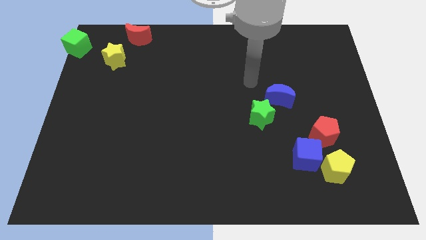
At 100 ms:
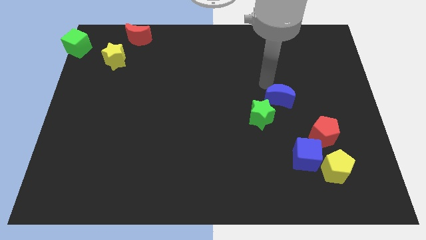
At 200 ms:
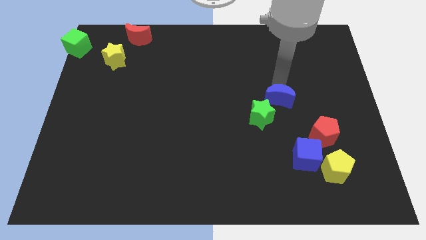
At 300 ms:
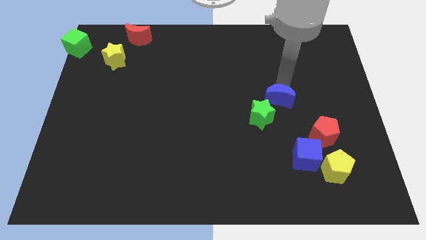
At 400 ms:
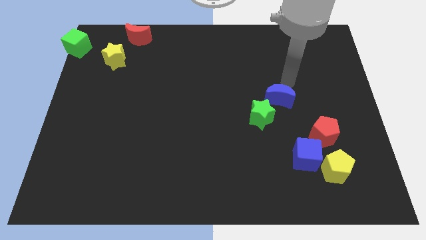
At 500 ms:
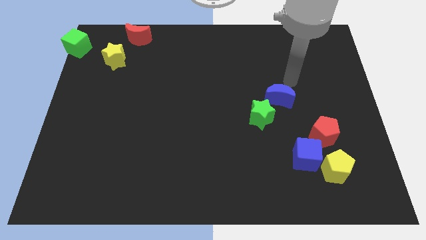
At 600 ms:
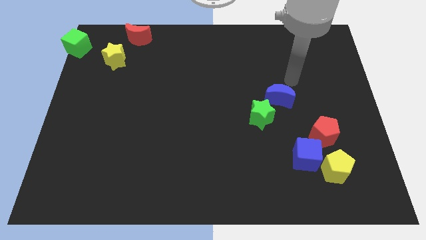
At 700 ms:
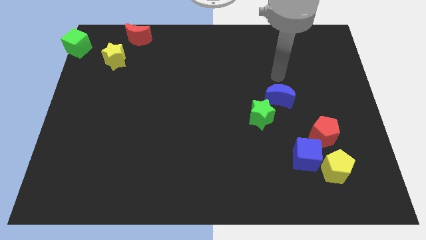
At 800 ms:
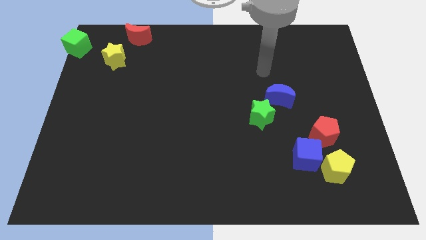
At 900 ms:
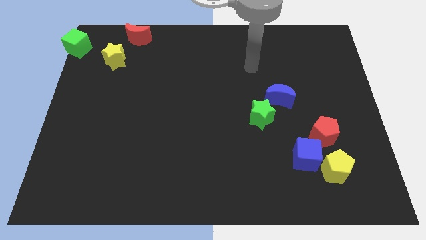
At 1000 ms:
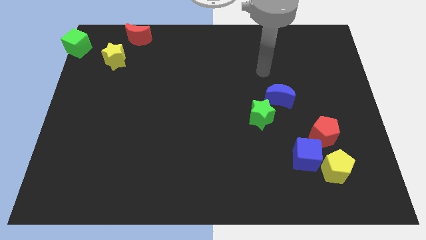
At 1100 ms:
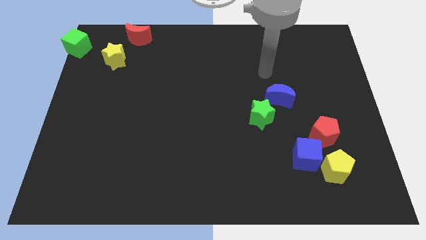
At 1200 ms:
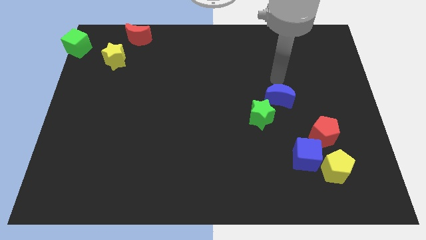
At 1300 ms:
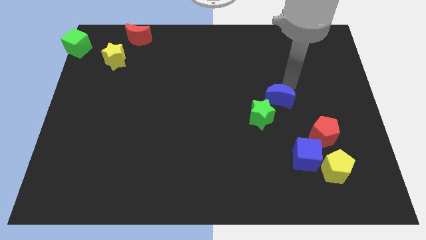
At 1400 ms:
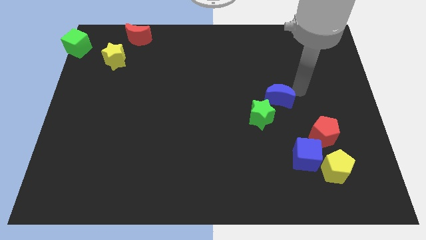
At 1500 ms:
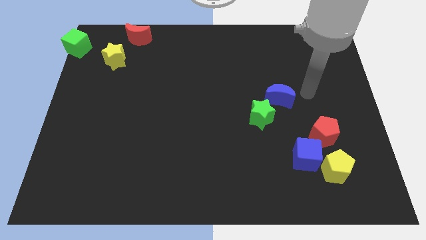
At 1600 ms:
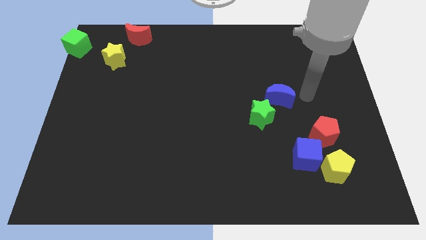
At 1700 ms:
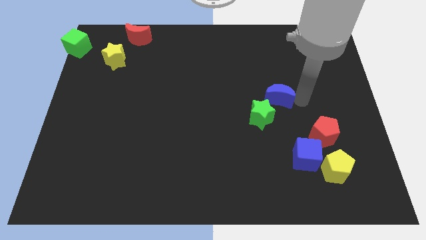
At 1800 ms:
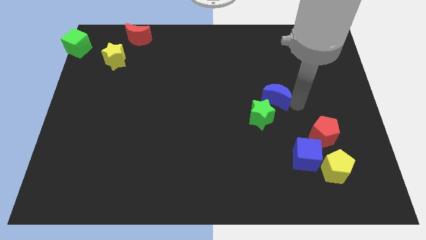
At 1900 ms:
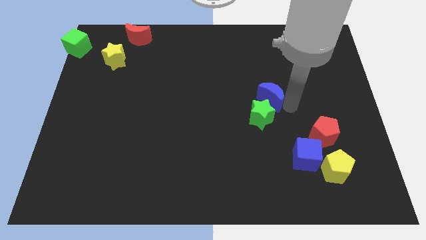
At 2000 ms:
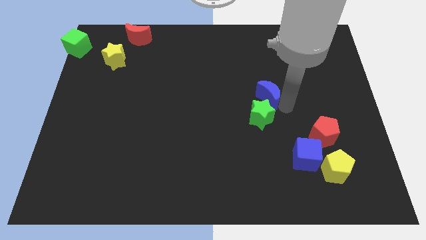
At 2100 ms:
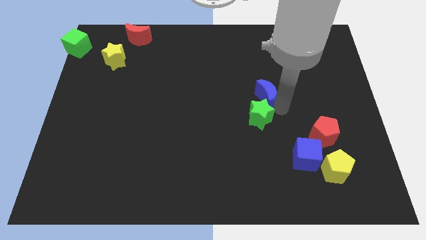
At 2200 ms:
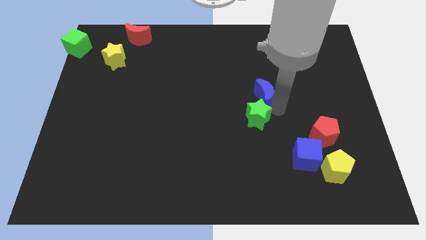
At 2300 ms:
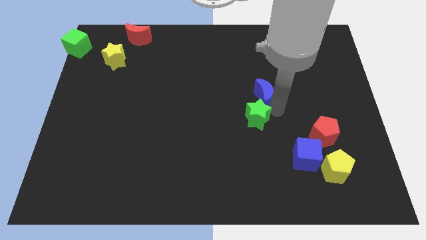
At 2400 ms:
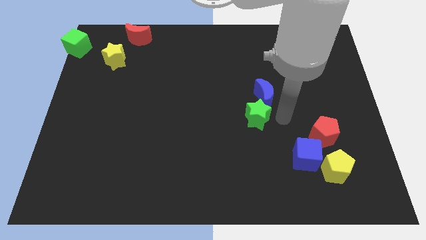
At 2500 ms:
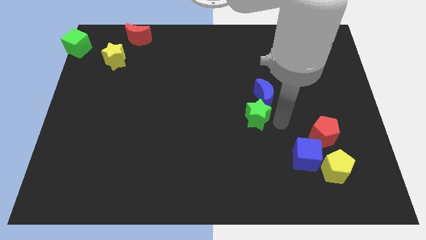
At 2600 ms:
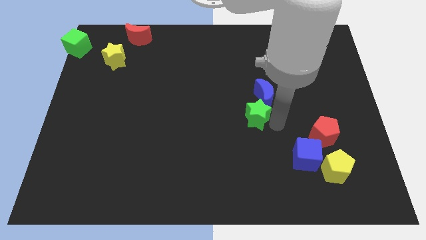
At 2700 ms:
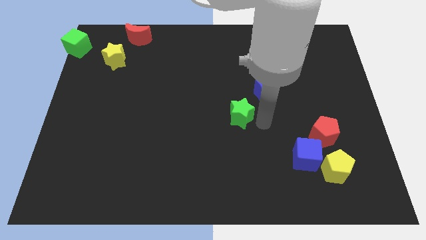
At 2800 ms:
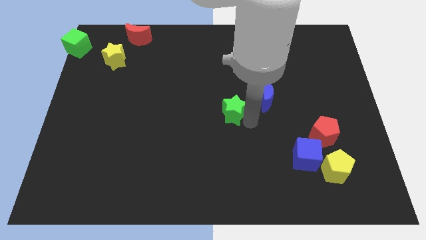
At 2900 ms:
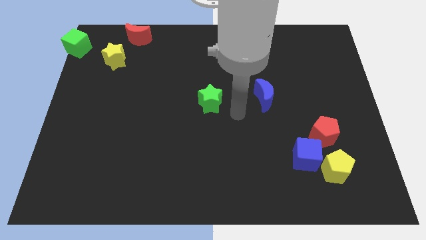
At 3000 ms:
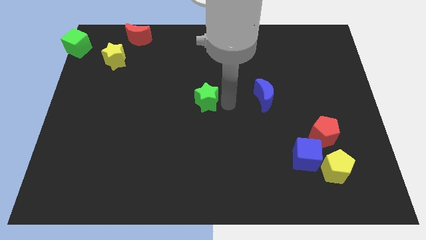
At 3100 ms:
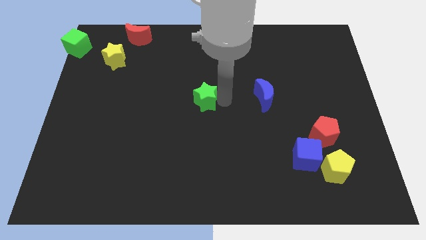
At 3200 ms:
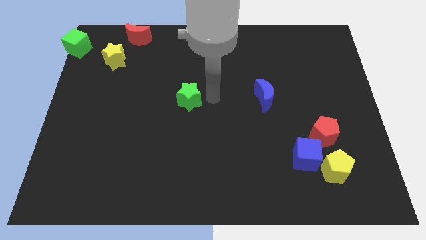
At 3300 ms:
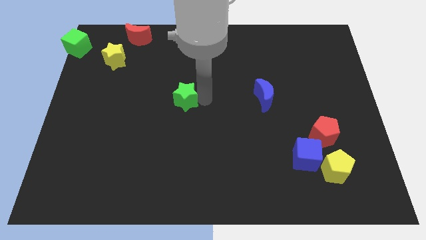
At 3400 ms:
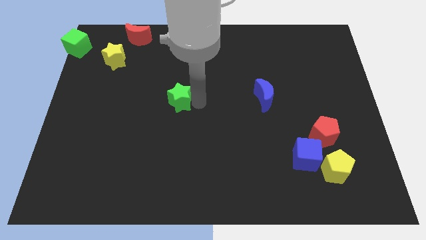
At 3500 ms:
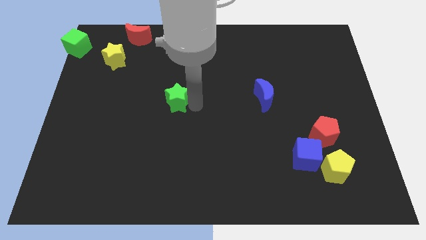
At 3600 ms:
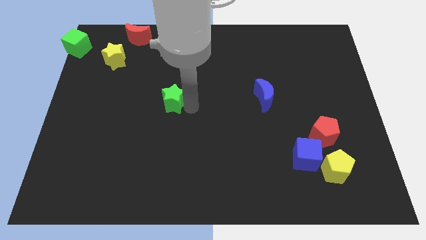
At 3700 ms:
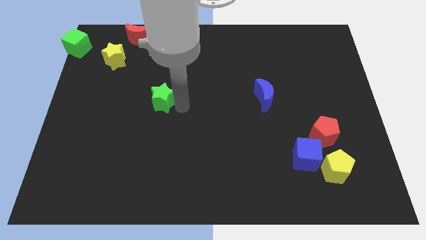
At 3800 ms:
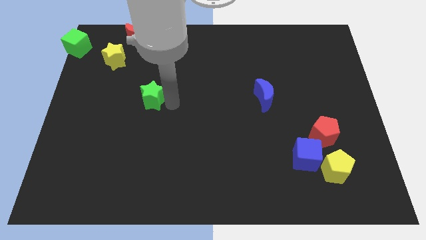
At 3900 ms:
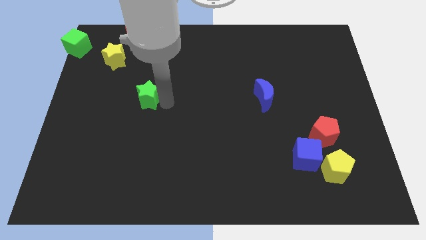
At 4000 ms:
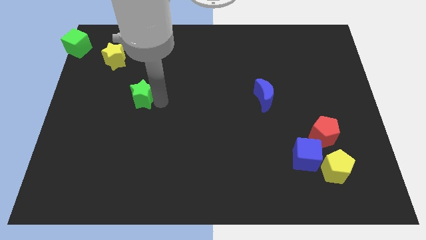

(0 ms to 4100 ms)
separate green star from blue moon

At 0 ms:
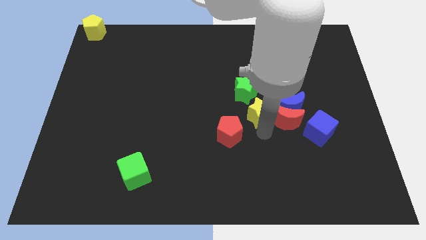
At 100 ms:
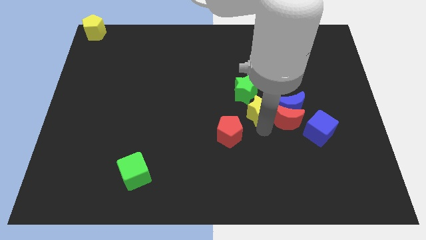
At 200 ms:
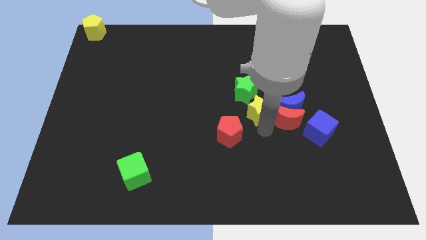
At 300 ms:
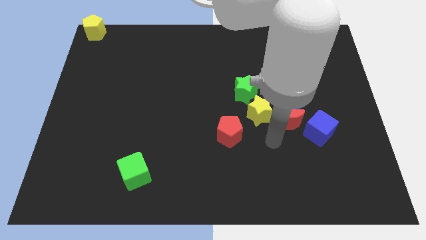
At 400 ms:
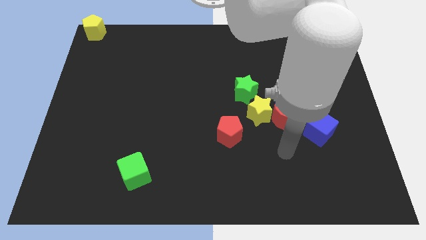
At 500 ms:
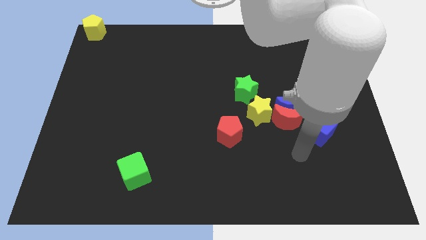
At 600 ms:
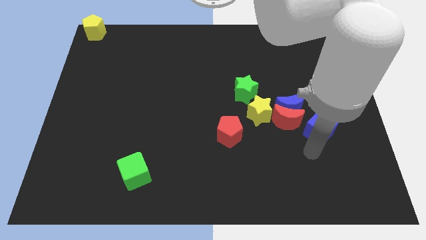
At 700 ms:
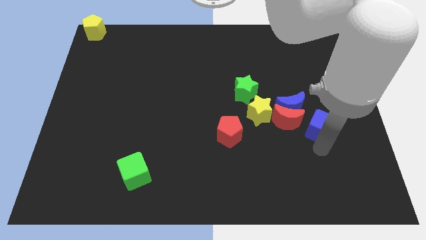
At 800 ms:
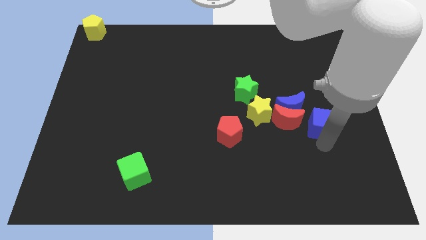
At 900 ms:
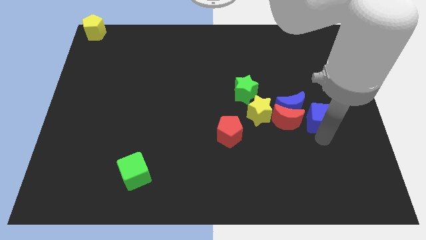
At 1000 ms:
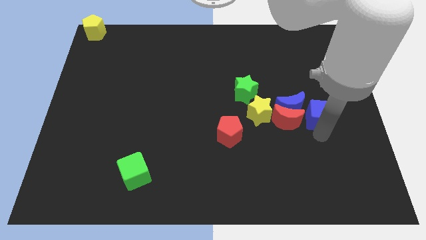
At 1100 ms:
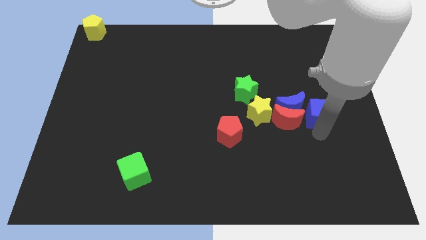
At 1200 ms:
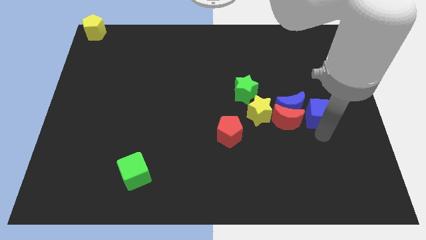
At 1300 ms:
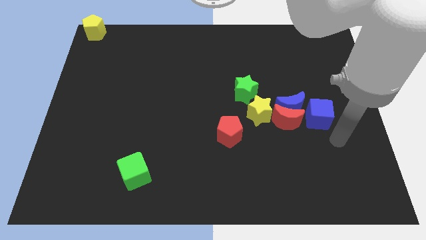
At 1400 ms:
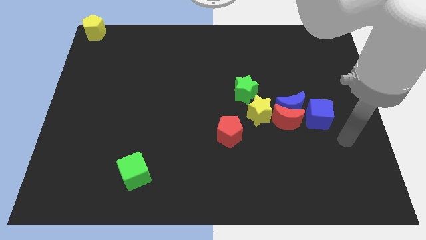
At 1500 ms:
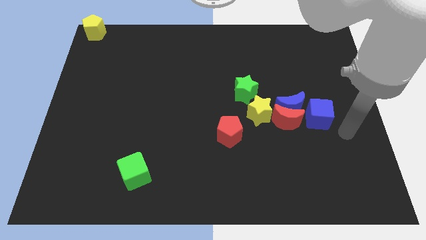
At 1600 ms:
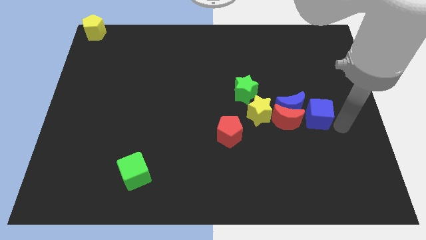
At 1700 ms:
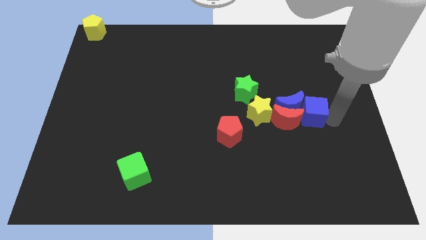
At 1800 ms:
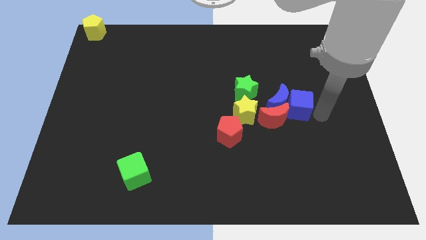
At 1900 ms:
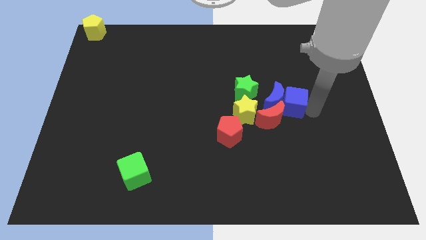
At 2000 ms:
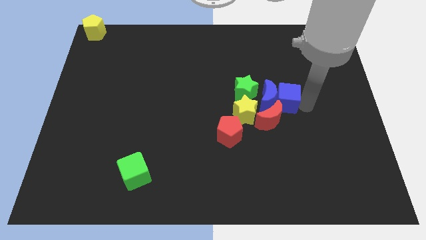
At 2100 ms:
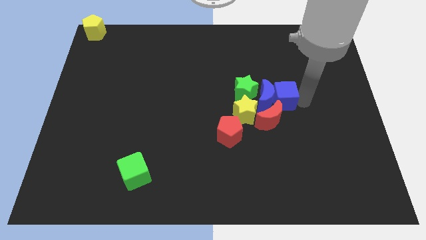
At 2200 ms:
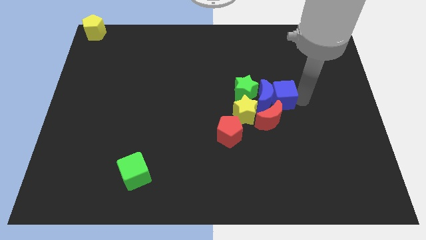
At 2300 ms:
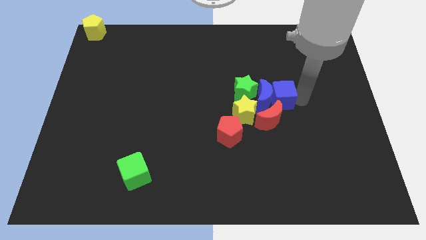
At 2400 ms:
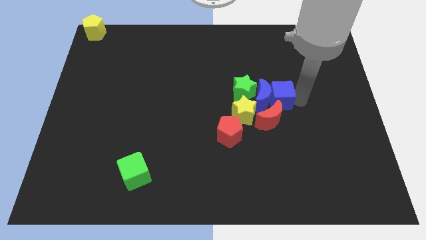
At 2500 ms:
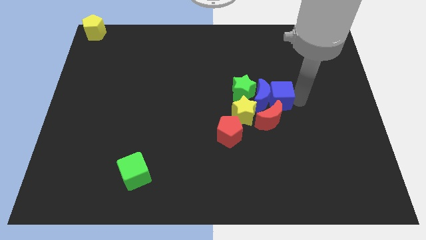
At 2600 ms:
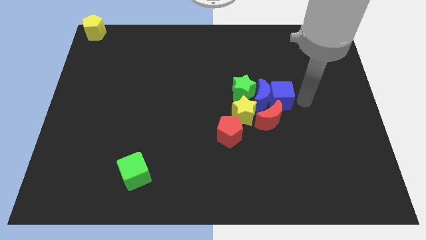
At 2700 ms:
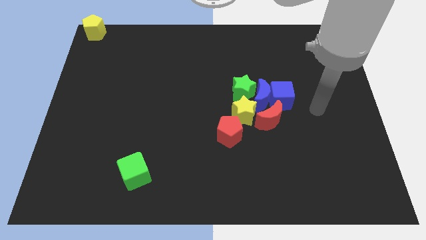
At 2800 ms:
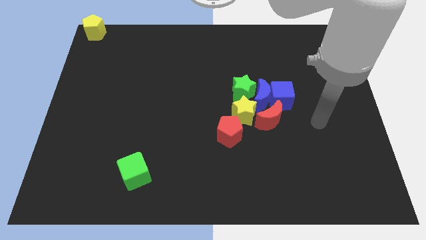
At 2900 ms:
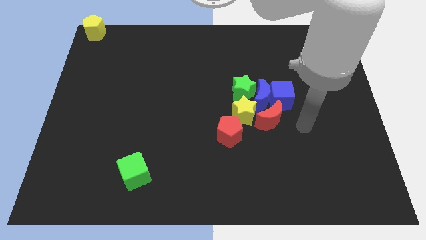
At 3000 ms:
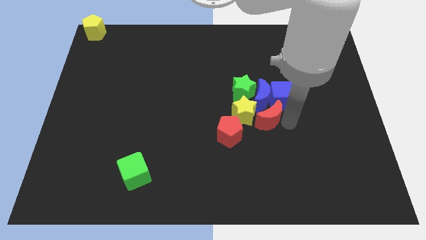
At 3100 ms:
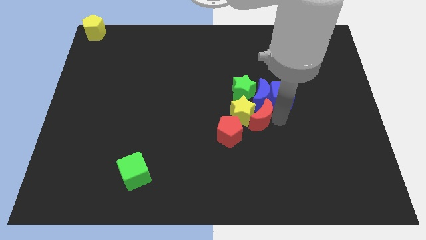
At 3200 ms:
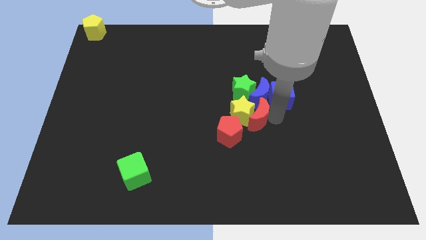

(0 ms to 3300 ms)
push blue crescent with the blue cube towards the center of the board

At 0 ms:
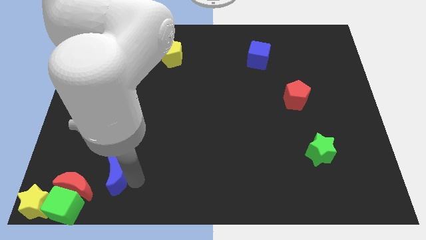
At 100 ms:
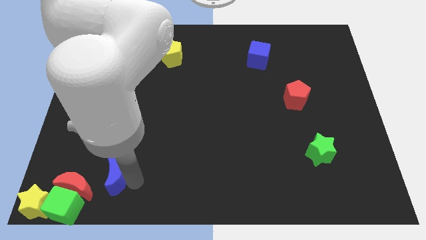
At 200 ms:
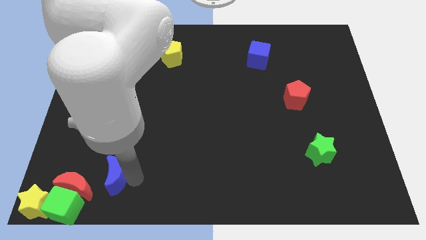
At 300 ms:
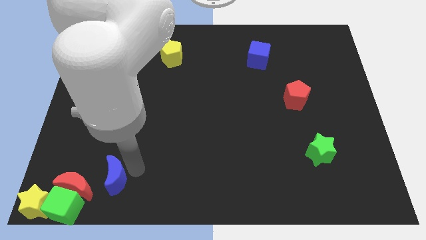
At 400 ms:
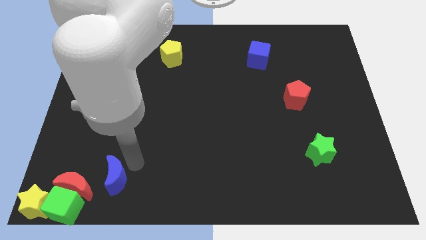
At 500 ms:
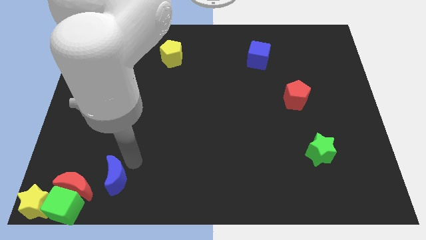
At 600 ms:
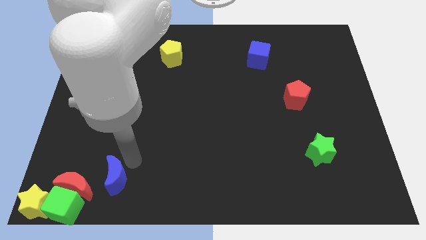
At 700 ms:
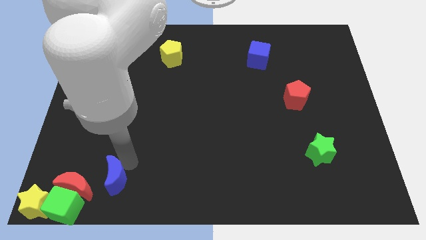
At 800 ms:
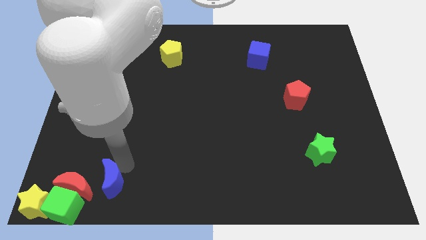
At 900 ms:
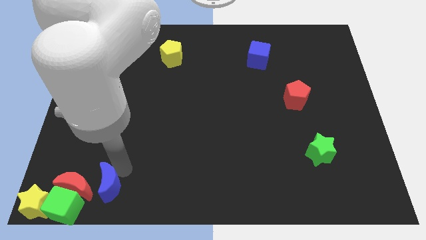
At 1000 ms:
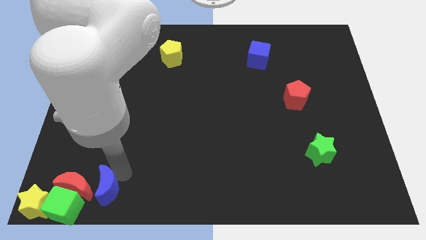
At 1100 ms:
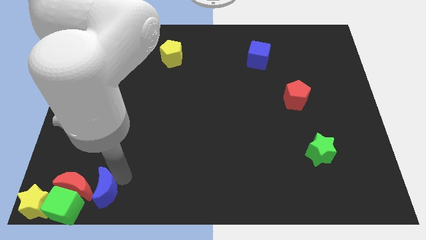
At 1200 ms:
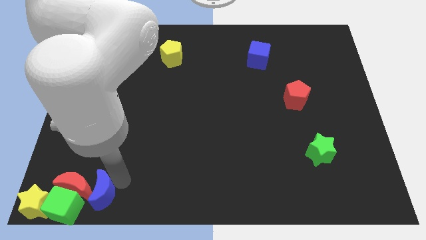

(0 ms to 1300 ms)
place blue moon next to red moon
